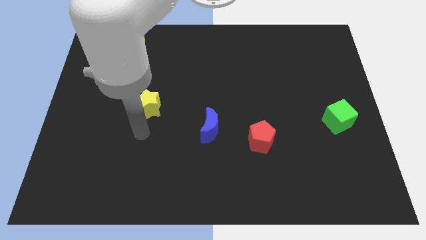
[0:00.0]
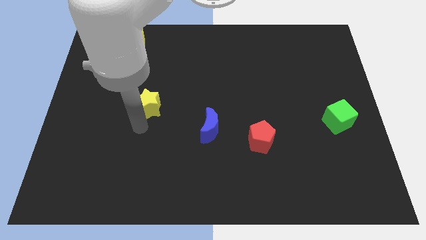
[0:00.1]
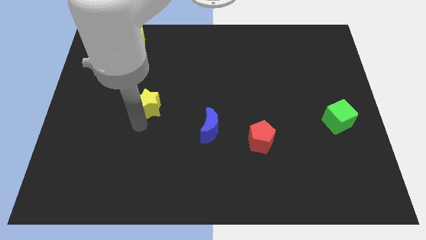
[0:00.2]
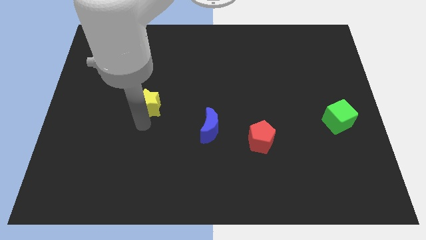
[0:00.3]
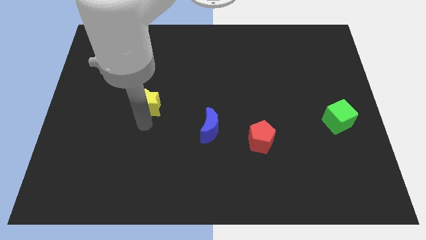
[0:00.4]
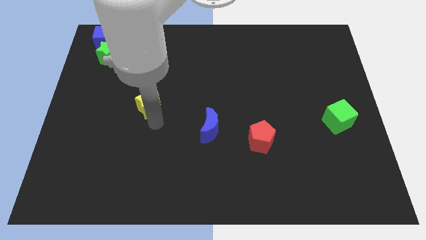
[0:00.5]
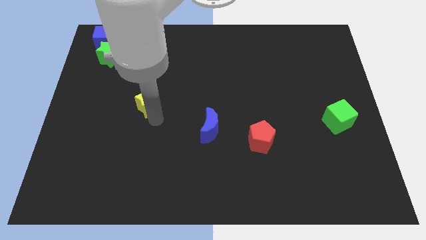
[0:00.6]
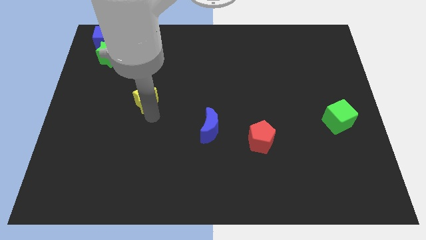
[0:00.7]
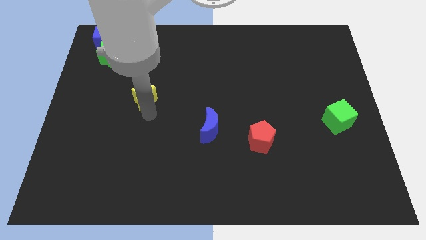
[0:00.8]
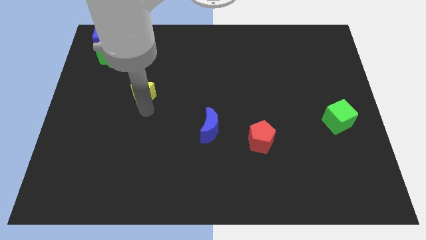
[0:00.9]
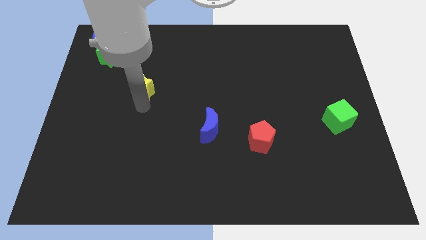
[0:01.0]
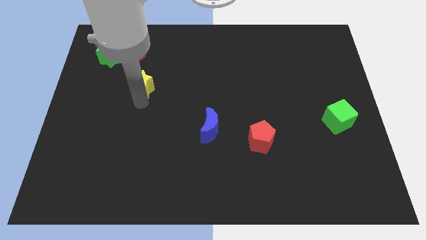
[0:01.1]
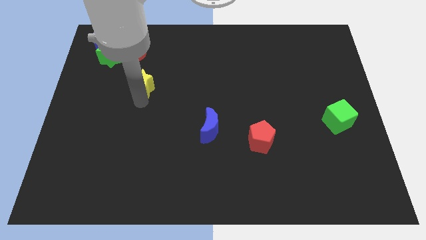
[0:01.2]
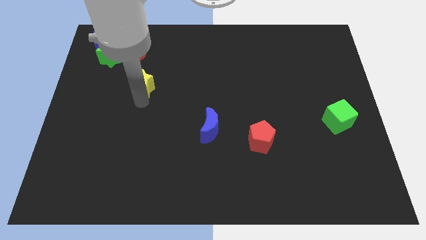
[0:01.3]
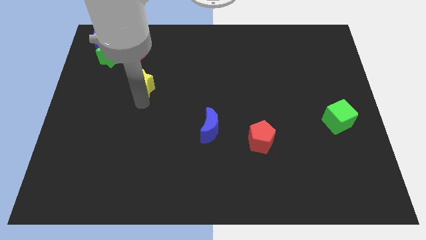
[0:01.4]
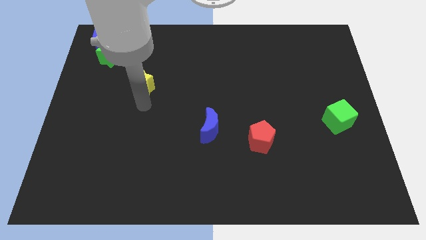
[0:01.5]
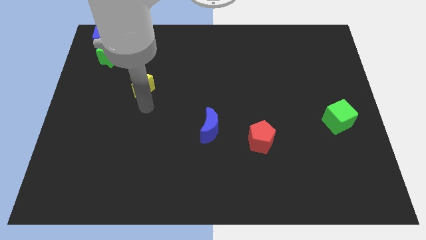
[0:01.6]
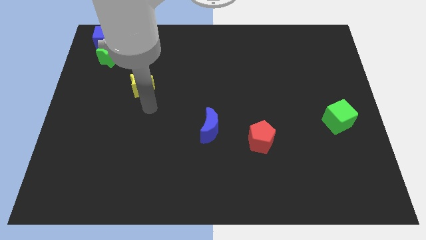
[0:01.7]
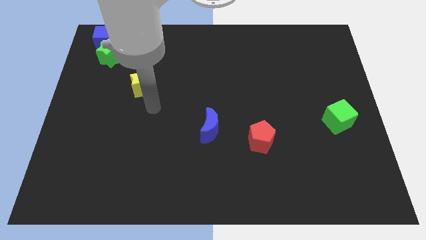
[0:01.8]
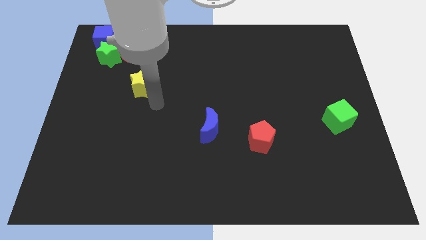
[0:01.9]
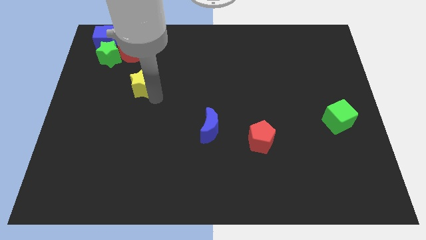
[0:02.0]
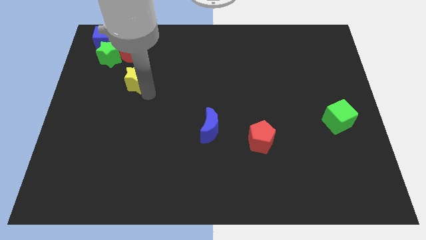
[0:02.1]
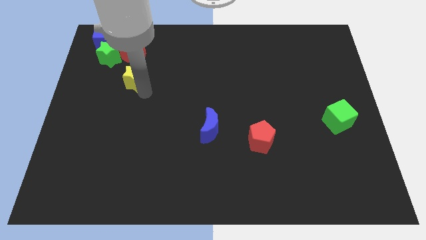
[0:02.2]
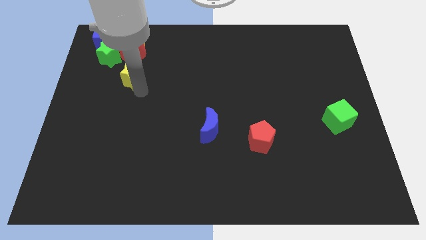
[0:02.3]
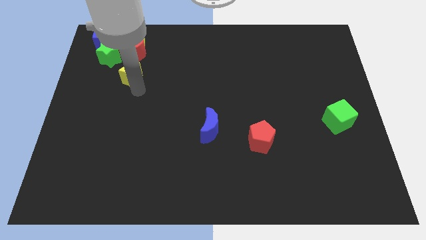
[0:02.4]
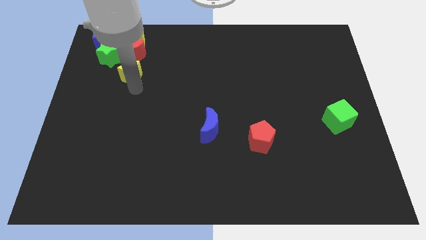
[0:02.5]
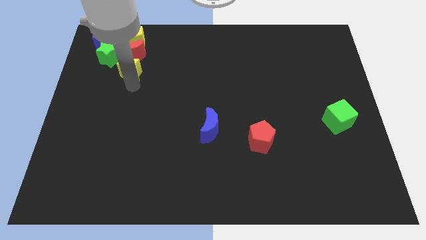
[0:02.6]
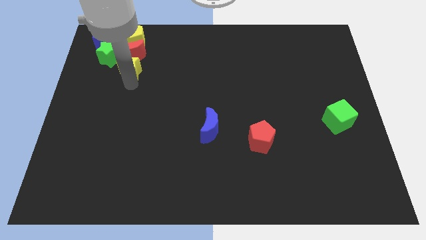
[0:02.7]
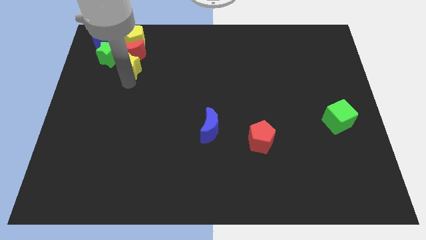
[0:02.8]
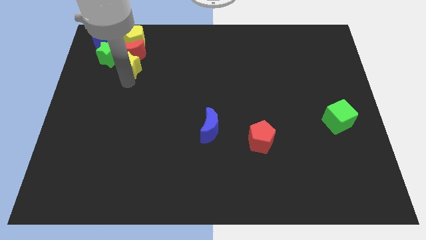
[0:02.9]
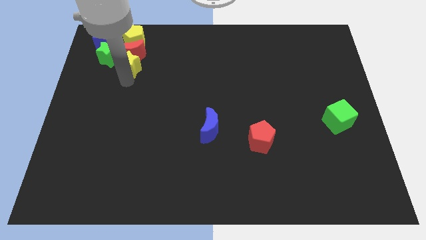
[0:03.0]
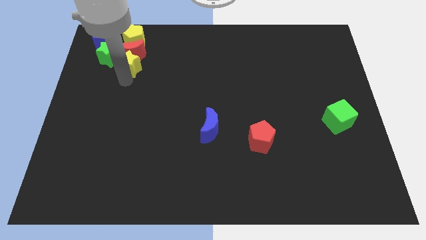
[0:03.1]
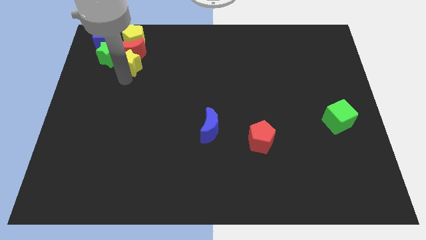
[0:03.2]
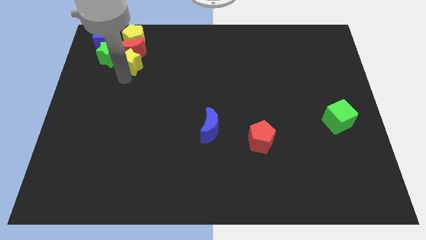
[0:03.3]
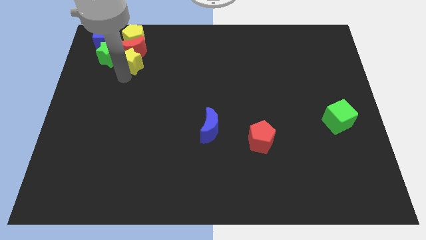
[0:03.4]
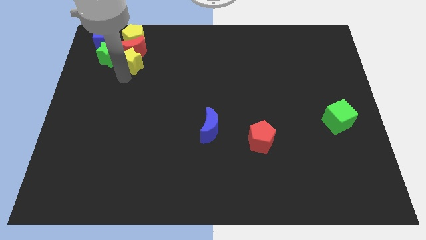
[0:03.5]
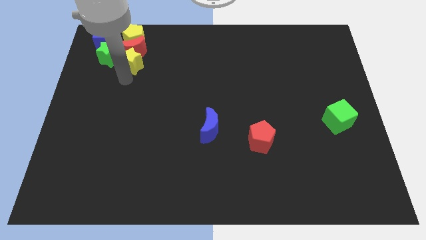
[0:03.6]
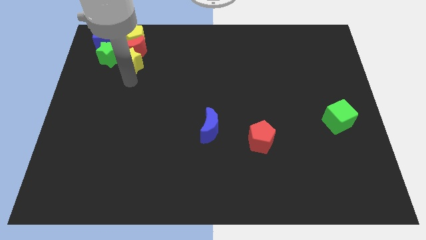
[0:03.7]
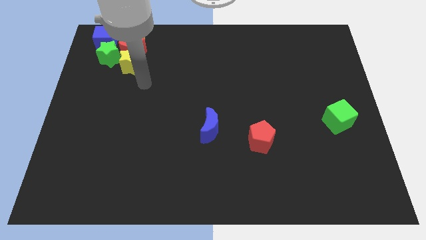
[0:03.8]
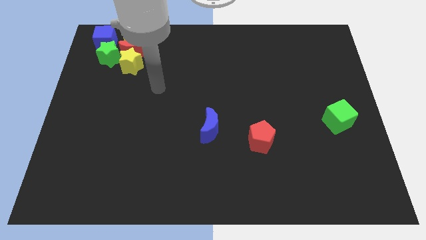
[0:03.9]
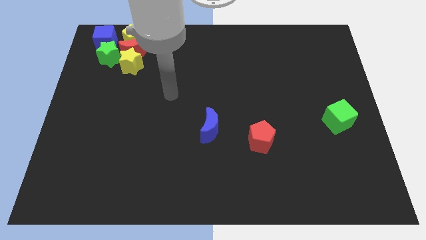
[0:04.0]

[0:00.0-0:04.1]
push the yellow star into the red moon

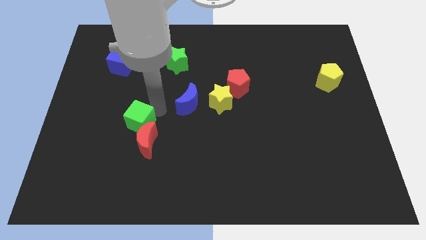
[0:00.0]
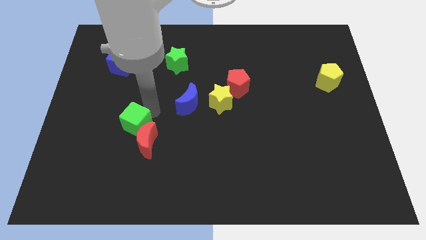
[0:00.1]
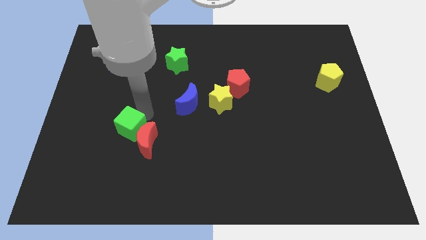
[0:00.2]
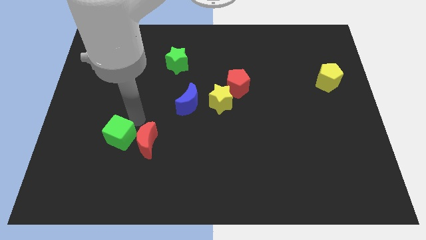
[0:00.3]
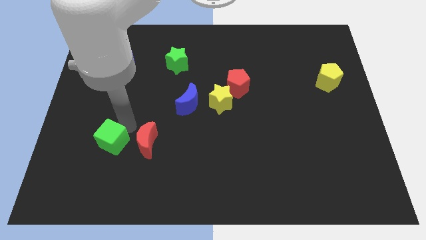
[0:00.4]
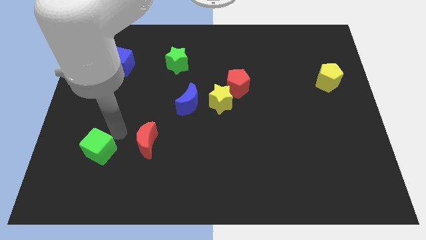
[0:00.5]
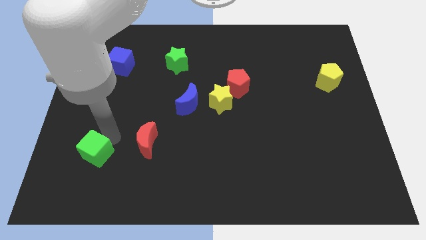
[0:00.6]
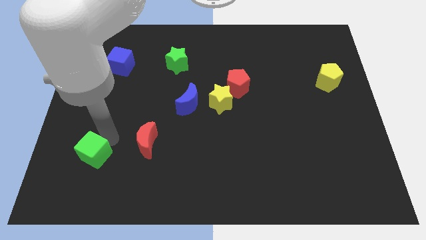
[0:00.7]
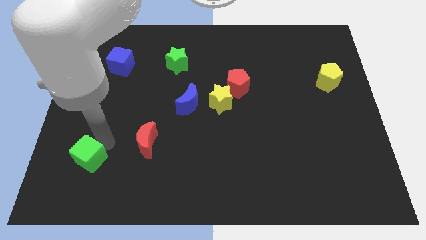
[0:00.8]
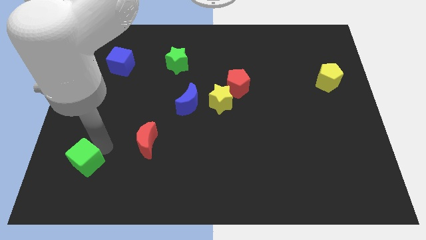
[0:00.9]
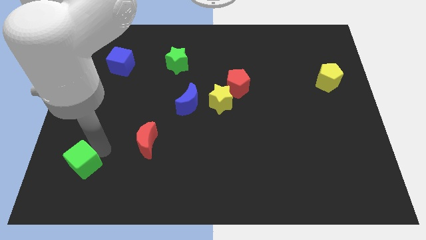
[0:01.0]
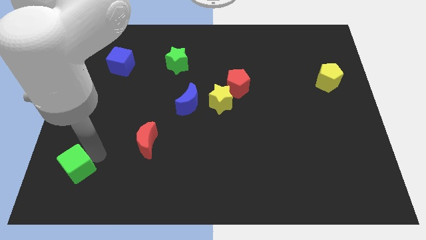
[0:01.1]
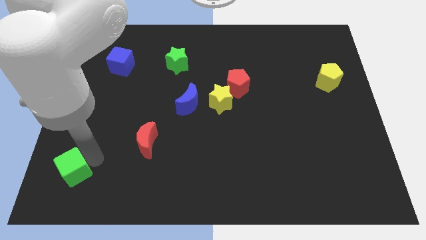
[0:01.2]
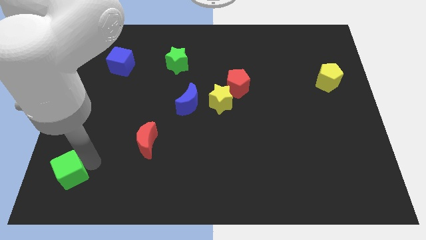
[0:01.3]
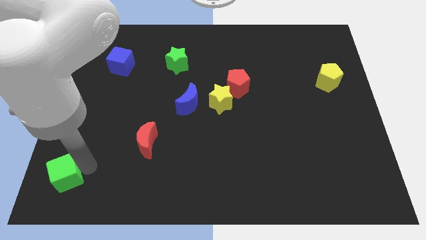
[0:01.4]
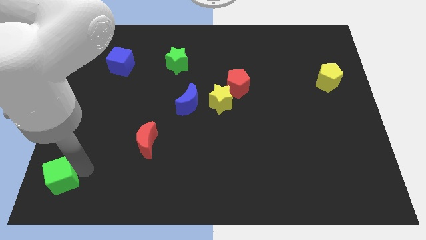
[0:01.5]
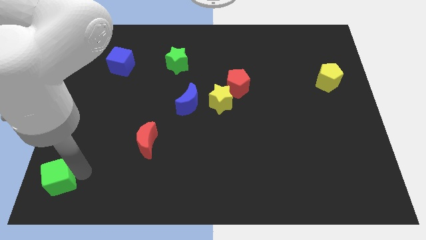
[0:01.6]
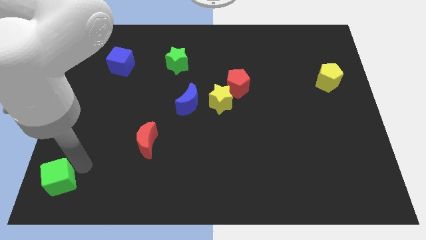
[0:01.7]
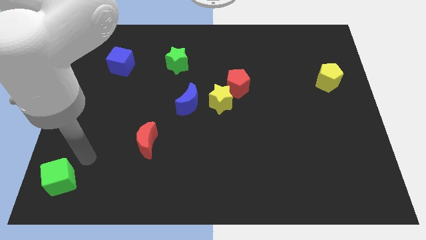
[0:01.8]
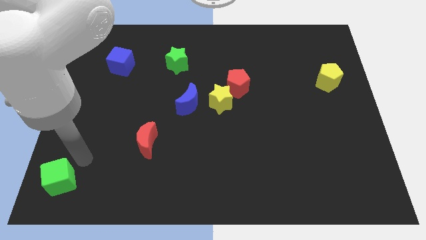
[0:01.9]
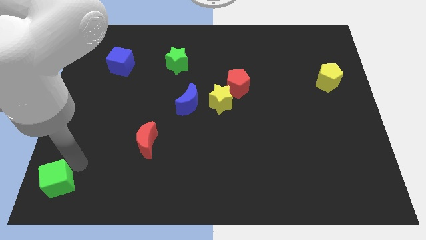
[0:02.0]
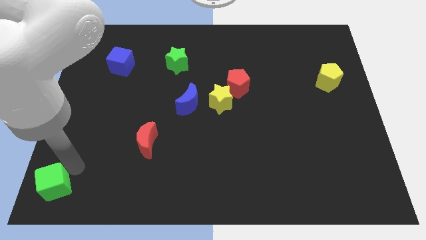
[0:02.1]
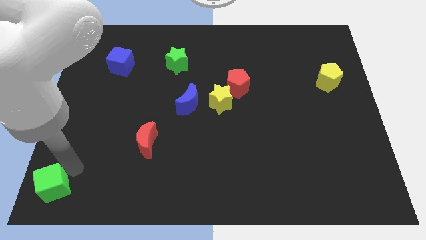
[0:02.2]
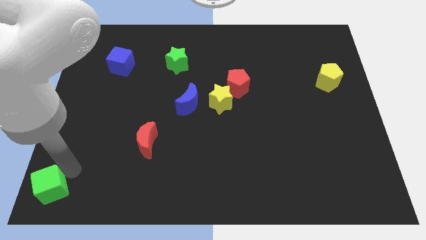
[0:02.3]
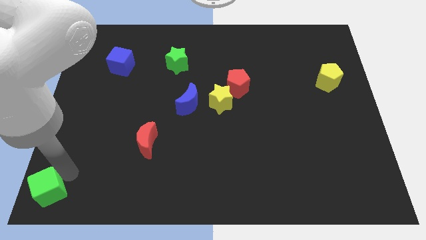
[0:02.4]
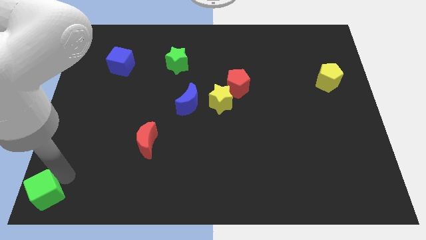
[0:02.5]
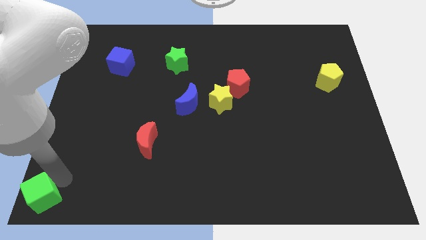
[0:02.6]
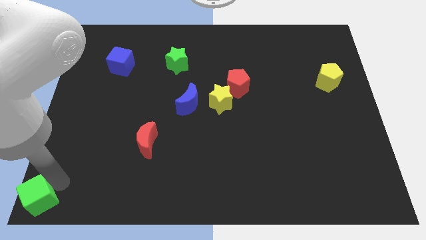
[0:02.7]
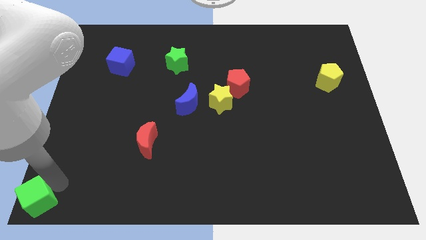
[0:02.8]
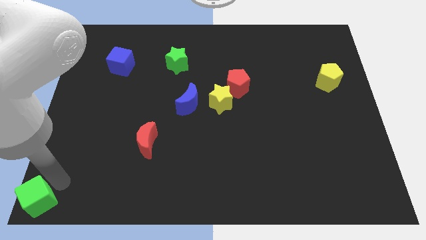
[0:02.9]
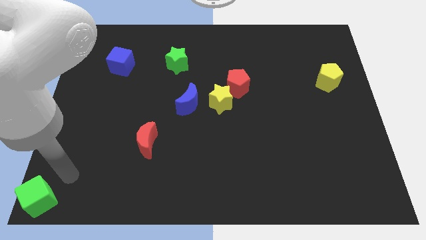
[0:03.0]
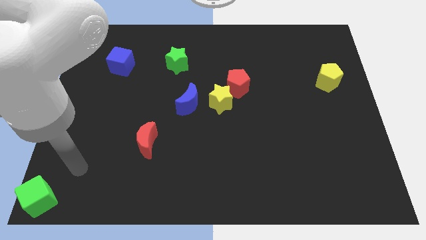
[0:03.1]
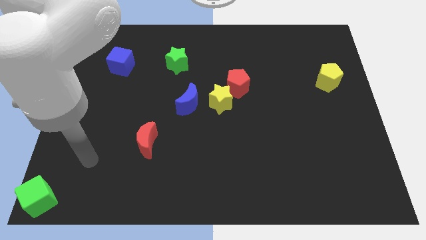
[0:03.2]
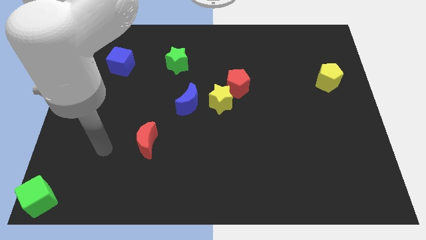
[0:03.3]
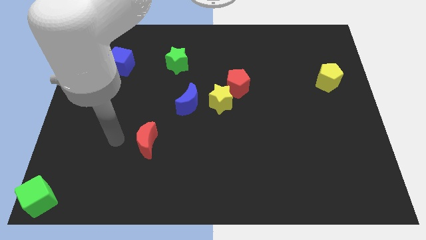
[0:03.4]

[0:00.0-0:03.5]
move the green cube to the left bottom

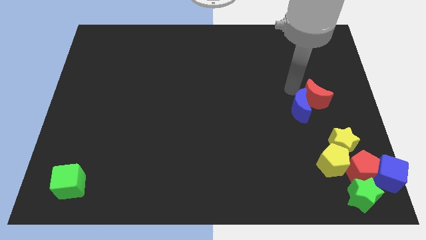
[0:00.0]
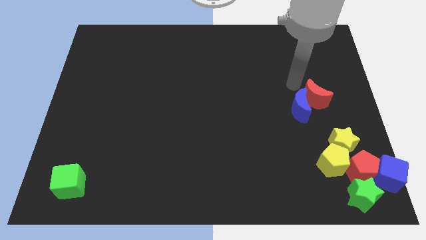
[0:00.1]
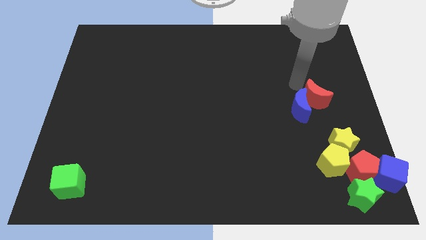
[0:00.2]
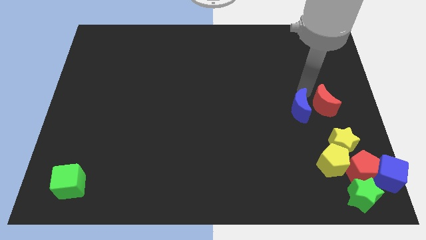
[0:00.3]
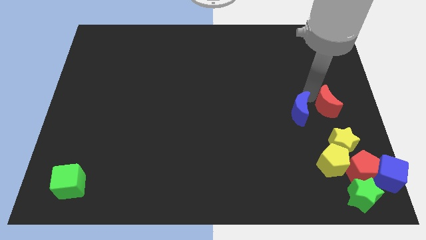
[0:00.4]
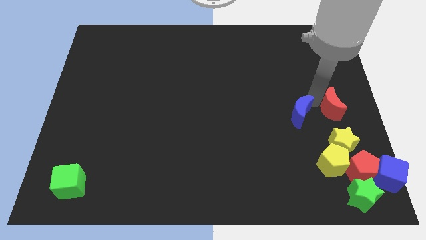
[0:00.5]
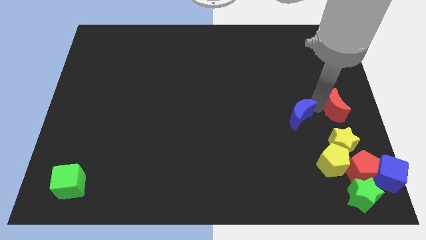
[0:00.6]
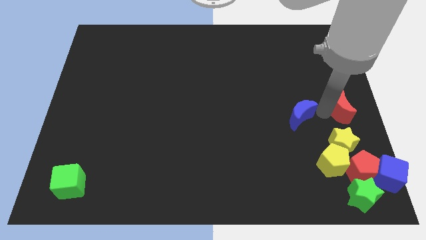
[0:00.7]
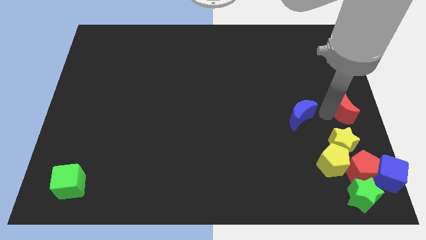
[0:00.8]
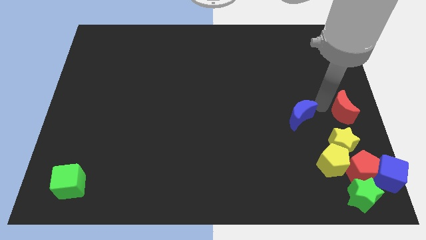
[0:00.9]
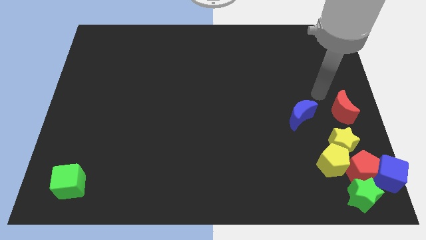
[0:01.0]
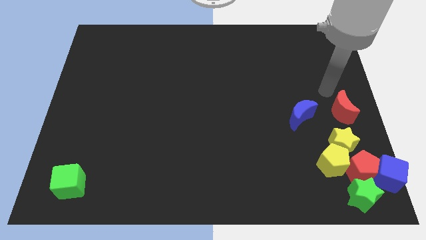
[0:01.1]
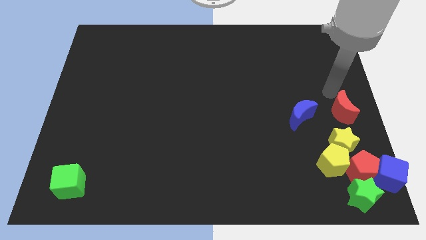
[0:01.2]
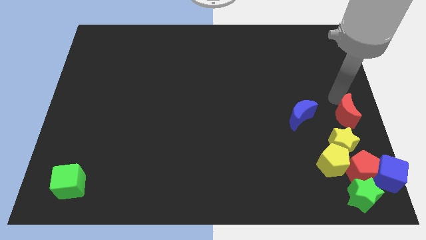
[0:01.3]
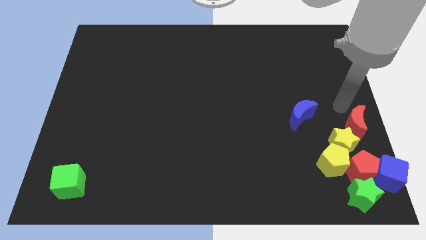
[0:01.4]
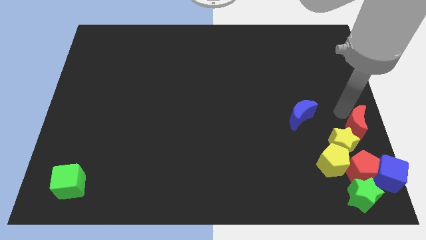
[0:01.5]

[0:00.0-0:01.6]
separate the blue moon and red moon
